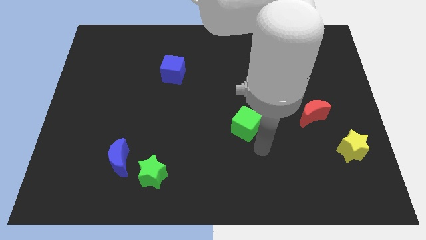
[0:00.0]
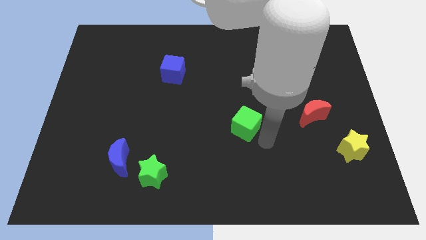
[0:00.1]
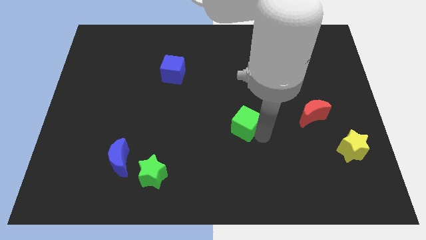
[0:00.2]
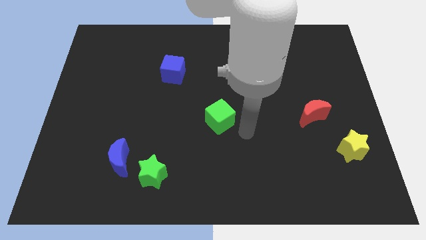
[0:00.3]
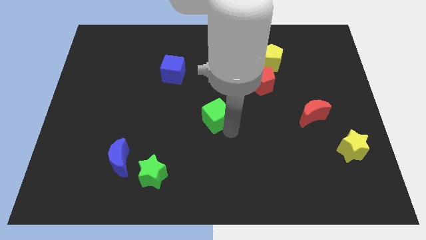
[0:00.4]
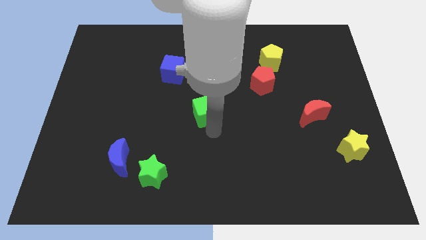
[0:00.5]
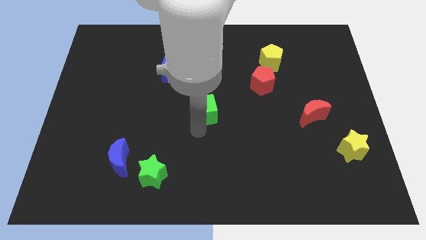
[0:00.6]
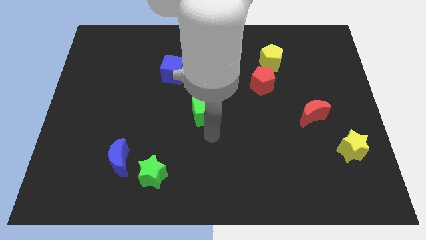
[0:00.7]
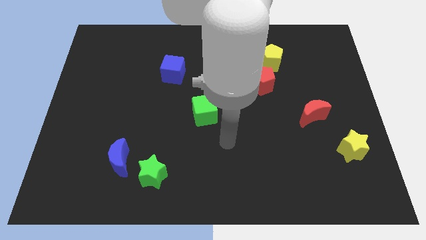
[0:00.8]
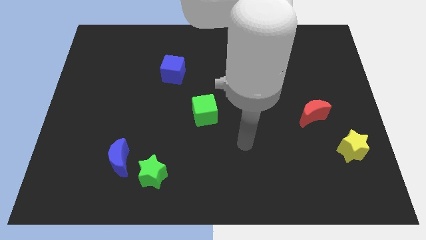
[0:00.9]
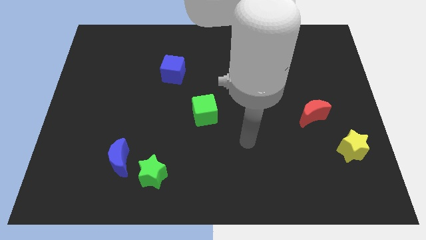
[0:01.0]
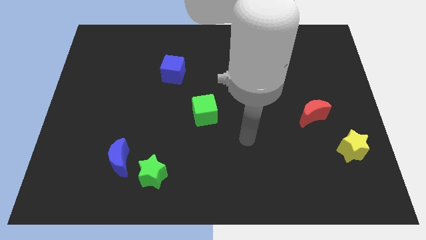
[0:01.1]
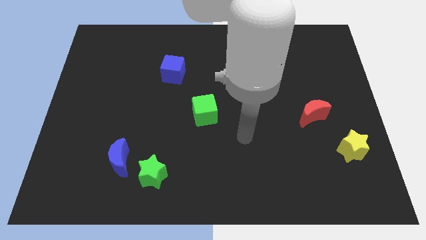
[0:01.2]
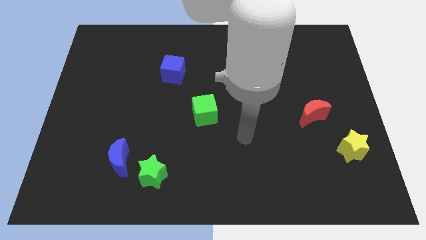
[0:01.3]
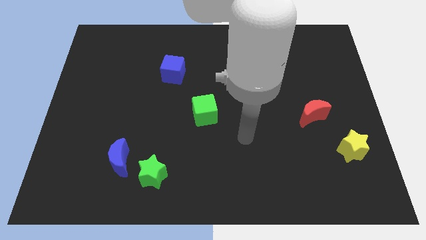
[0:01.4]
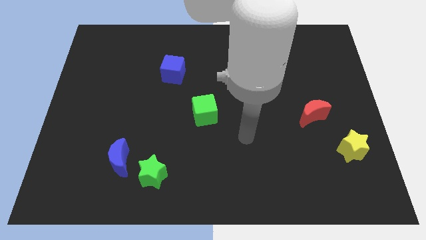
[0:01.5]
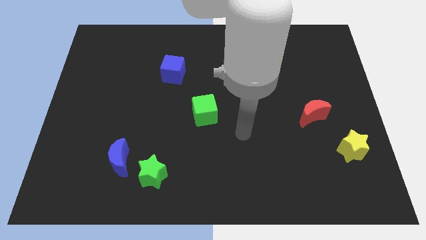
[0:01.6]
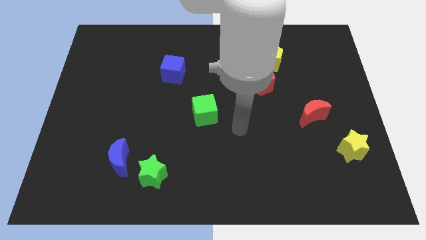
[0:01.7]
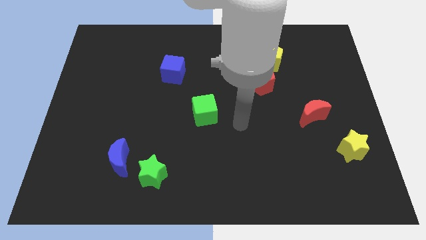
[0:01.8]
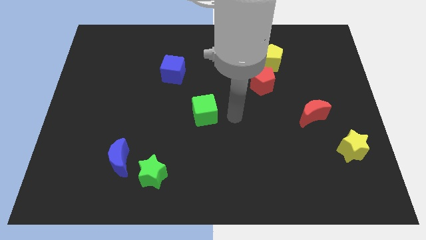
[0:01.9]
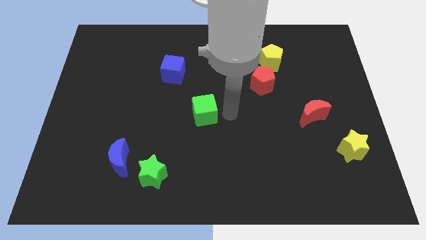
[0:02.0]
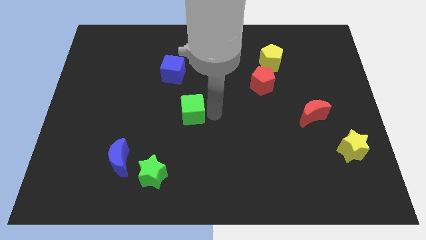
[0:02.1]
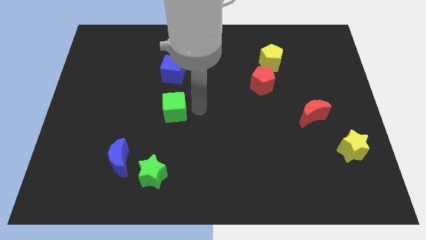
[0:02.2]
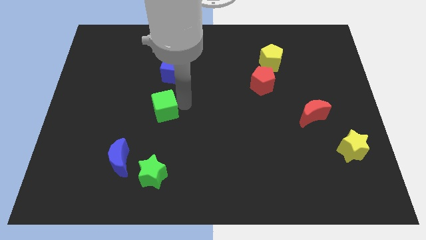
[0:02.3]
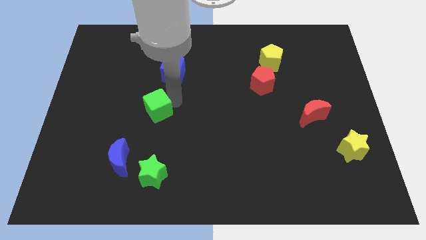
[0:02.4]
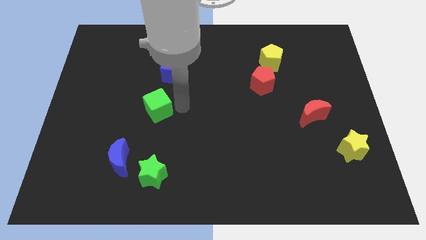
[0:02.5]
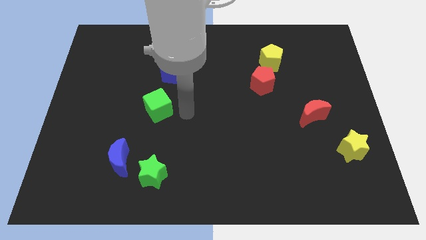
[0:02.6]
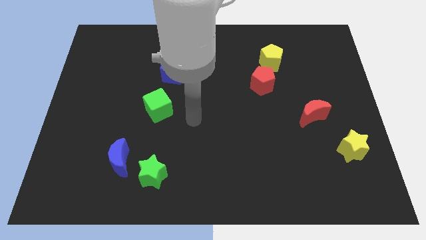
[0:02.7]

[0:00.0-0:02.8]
put the green cube below the blue cube

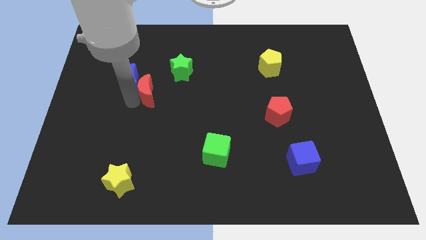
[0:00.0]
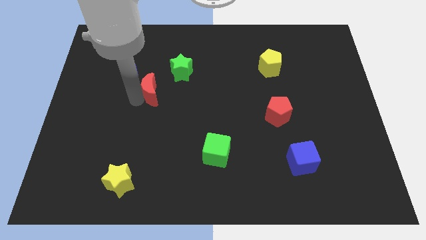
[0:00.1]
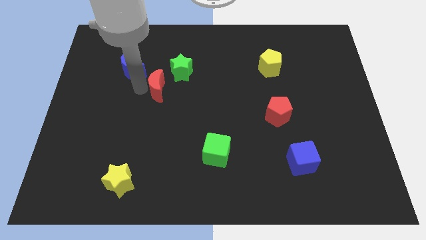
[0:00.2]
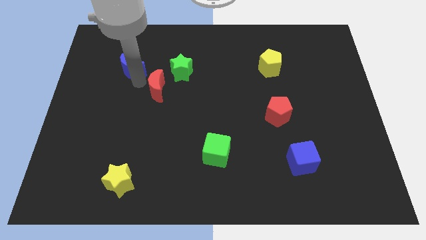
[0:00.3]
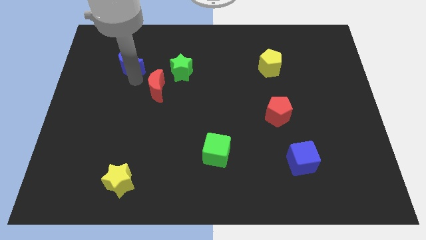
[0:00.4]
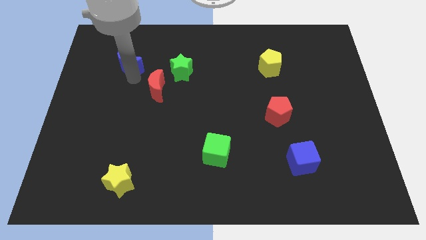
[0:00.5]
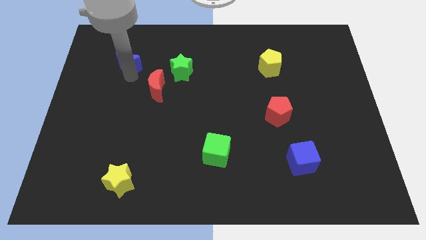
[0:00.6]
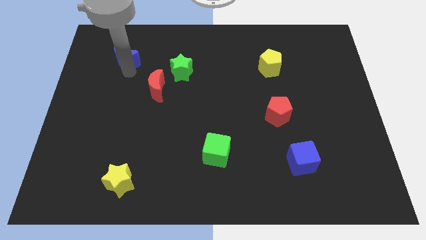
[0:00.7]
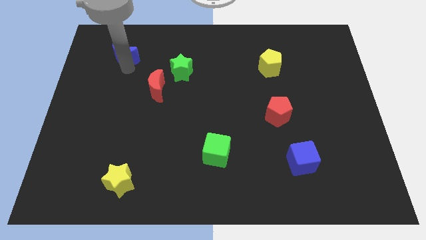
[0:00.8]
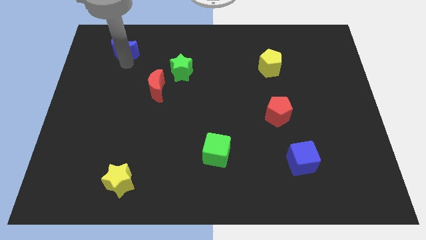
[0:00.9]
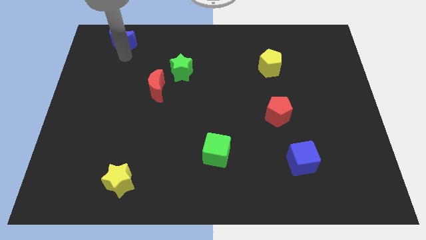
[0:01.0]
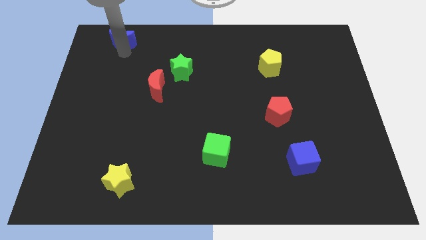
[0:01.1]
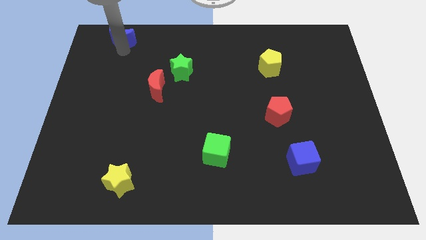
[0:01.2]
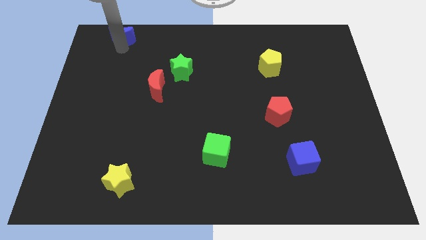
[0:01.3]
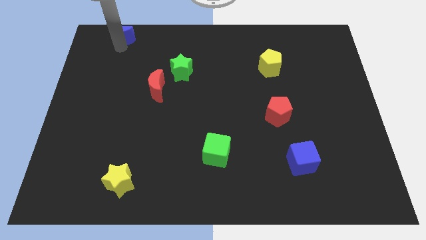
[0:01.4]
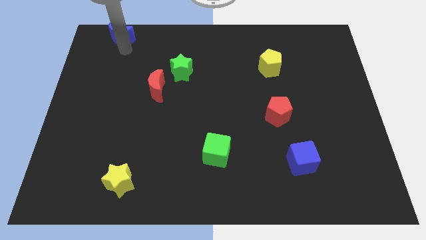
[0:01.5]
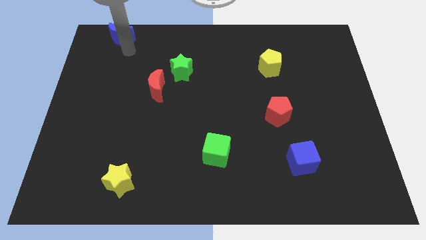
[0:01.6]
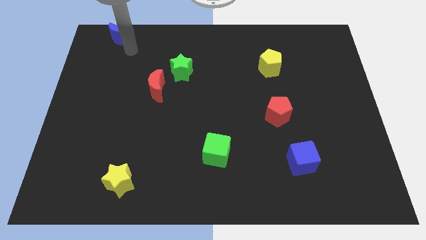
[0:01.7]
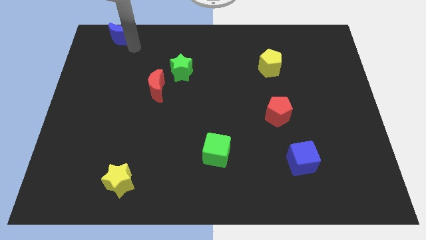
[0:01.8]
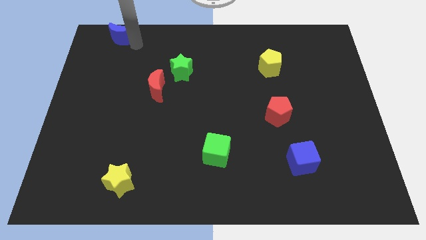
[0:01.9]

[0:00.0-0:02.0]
separate the blue moon from the red moon

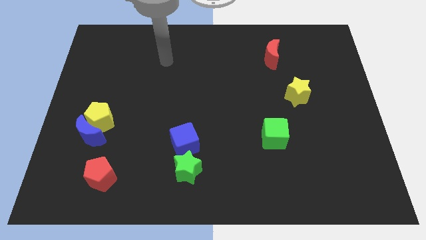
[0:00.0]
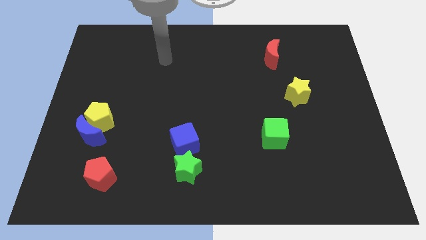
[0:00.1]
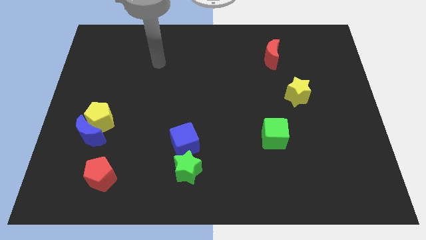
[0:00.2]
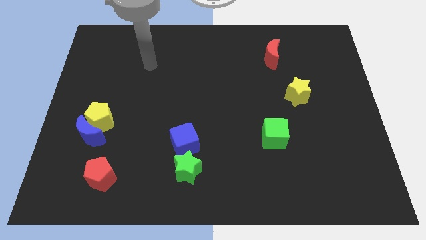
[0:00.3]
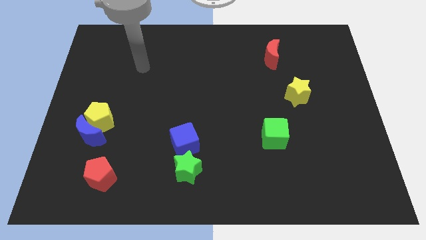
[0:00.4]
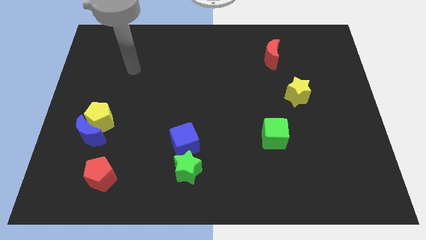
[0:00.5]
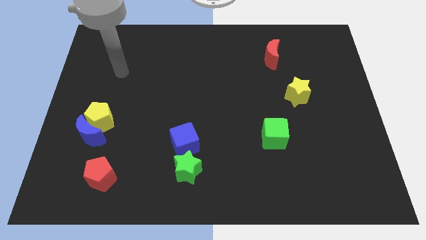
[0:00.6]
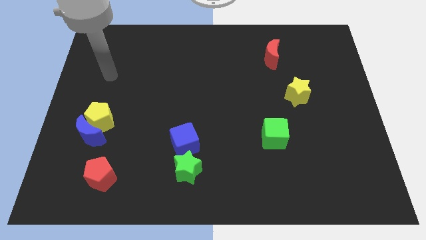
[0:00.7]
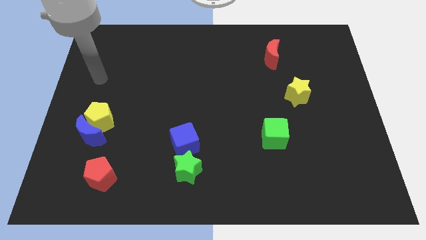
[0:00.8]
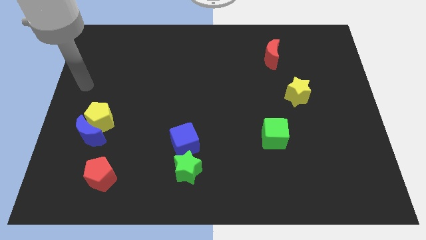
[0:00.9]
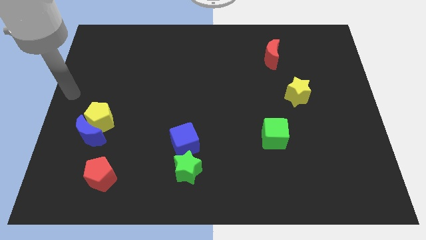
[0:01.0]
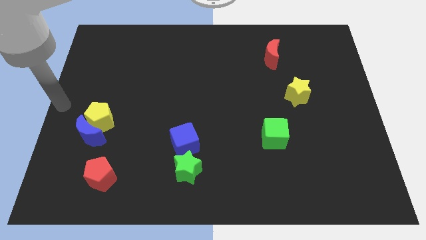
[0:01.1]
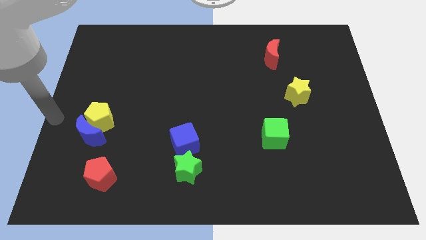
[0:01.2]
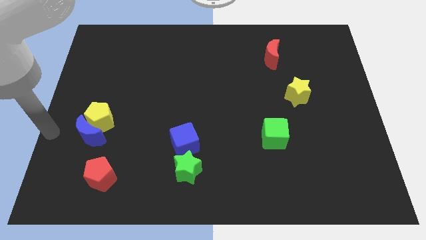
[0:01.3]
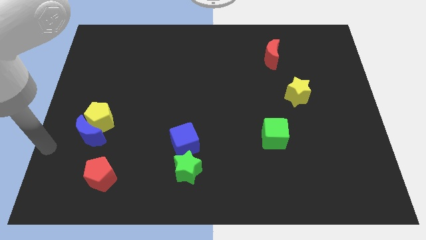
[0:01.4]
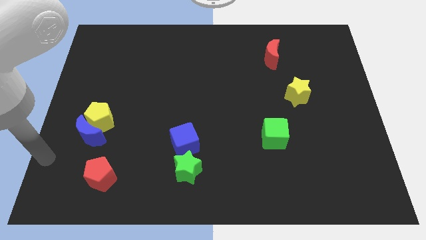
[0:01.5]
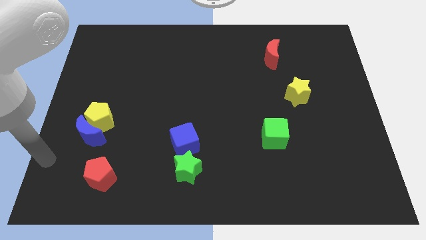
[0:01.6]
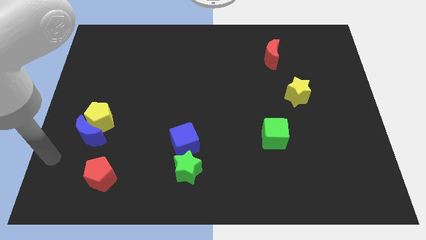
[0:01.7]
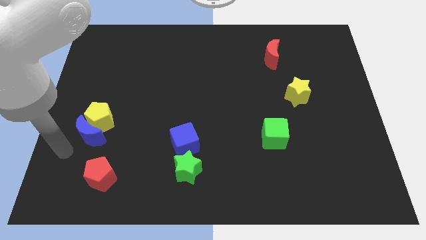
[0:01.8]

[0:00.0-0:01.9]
place your arm diagonally to the blue moon

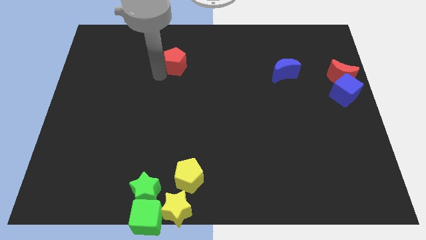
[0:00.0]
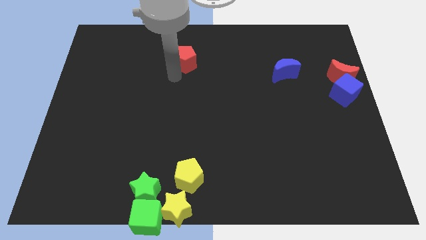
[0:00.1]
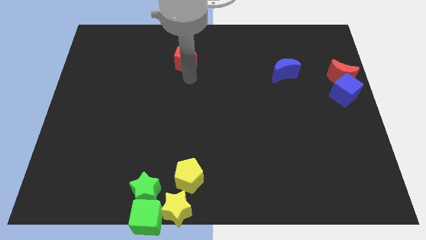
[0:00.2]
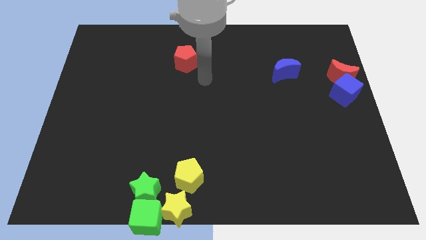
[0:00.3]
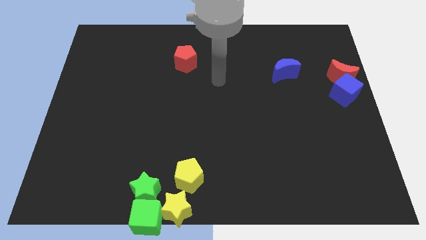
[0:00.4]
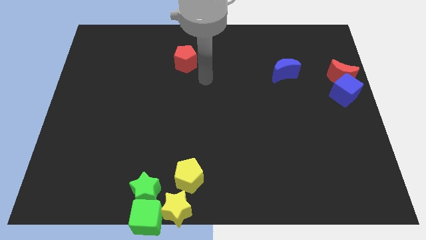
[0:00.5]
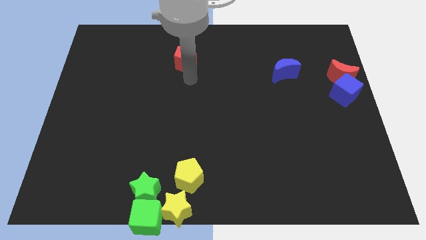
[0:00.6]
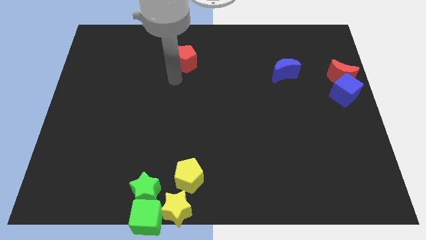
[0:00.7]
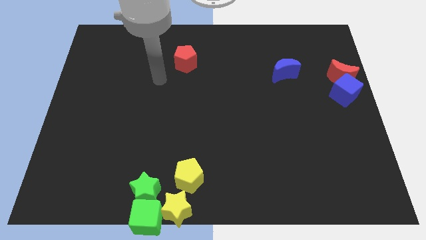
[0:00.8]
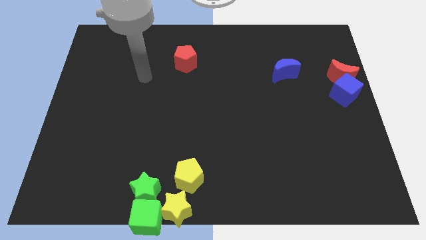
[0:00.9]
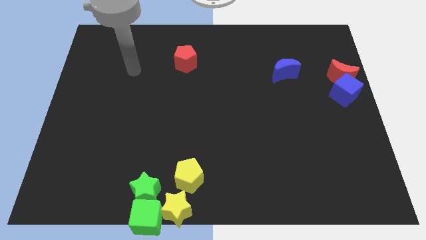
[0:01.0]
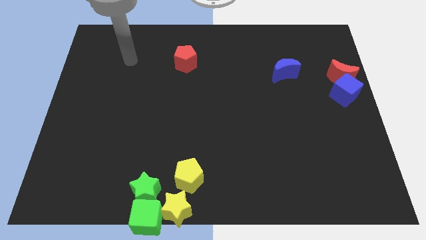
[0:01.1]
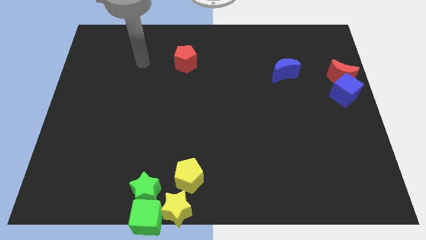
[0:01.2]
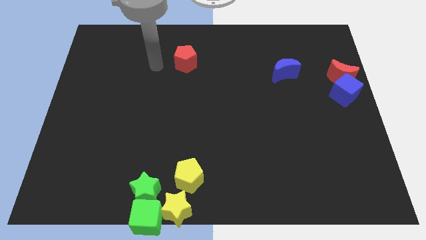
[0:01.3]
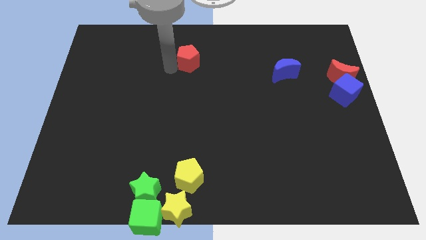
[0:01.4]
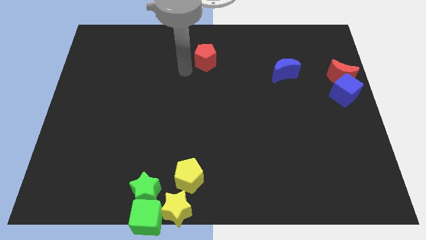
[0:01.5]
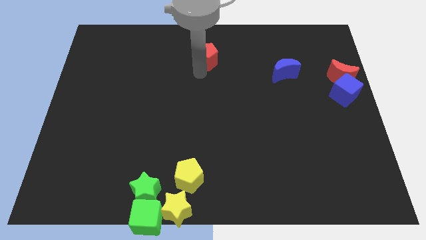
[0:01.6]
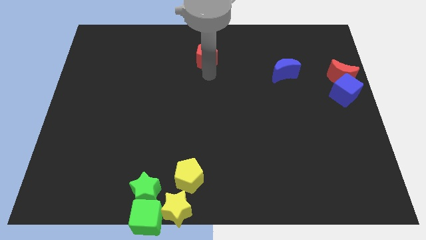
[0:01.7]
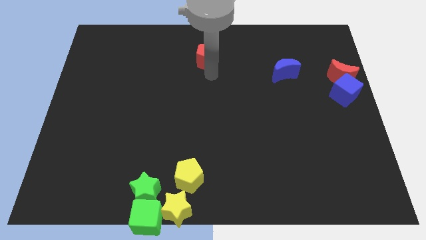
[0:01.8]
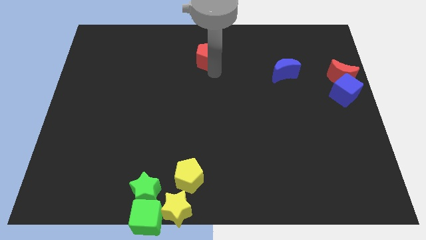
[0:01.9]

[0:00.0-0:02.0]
slightly touch the red pentagon at the top center of the board

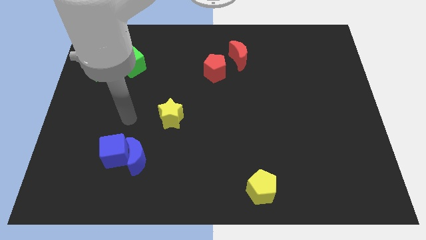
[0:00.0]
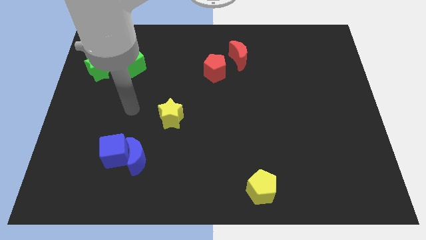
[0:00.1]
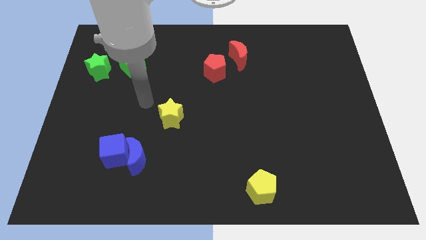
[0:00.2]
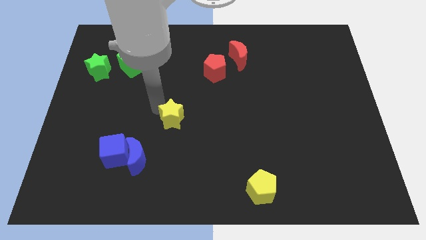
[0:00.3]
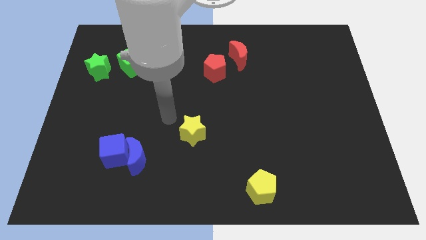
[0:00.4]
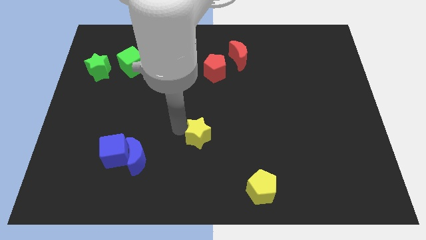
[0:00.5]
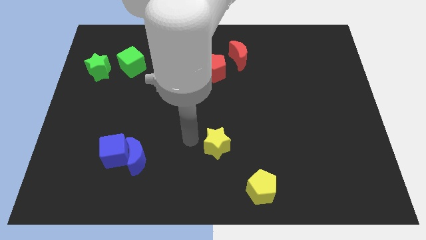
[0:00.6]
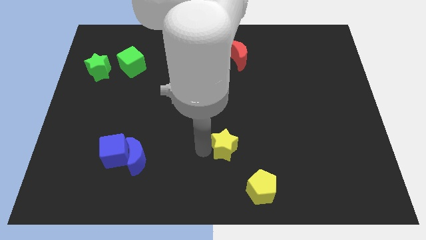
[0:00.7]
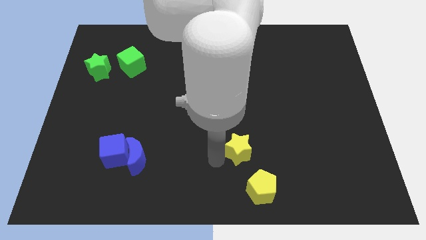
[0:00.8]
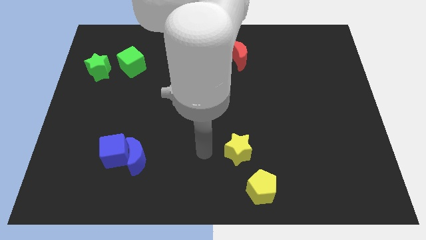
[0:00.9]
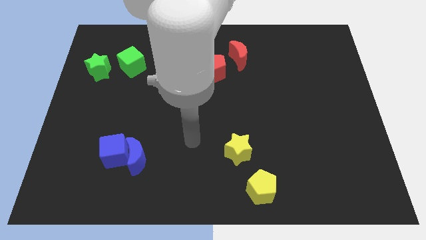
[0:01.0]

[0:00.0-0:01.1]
place the yellow star to top left of yellow pentagon
